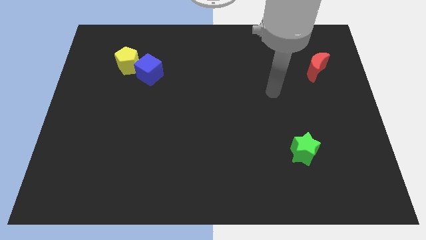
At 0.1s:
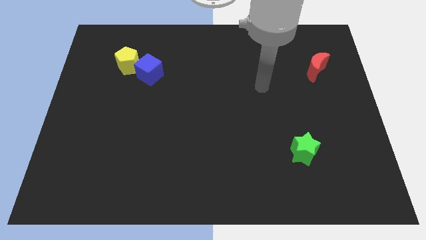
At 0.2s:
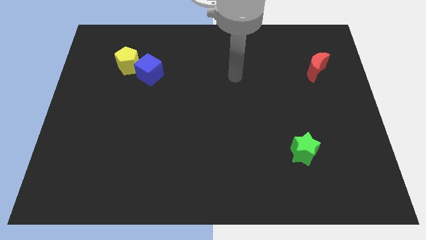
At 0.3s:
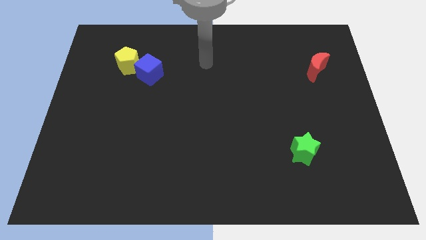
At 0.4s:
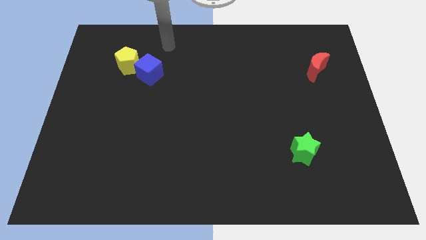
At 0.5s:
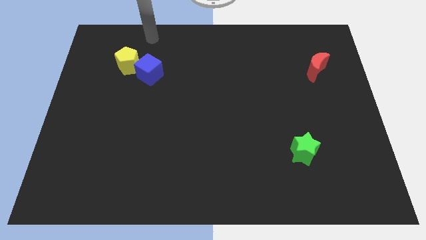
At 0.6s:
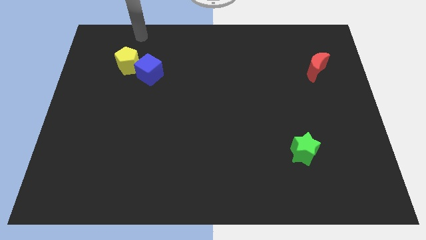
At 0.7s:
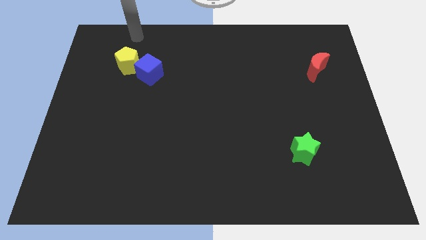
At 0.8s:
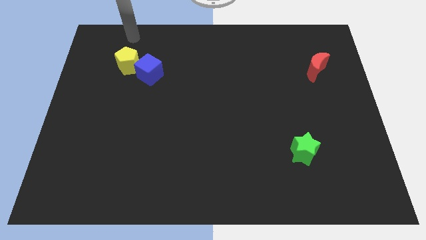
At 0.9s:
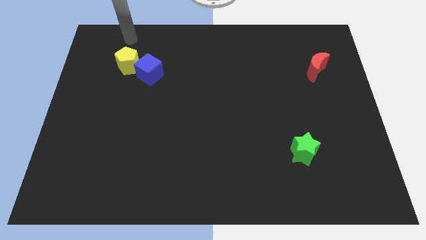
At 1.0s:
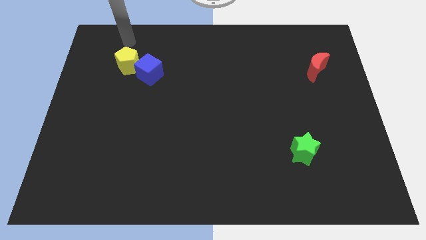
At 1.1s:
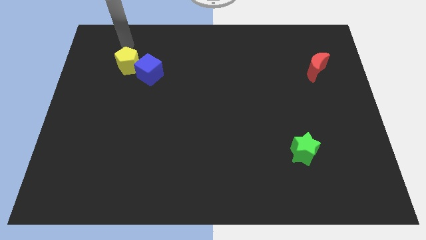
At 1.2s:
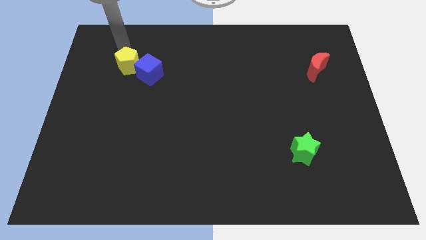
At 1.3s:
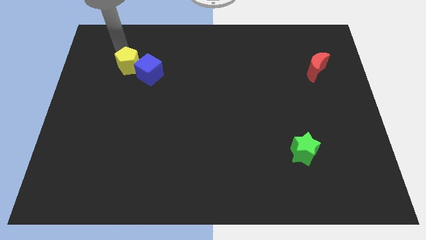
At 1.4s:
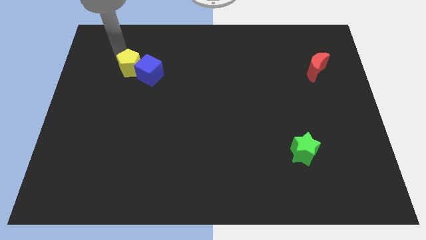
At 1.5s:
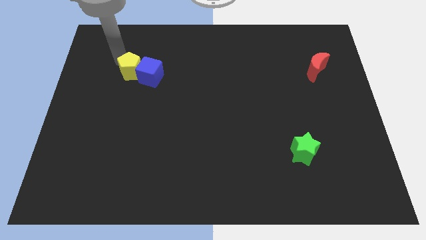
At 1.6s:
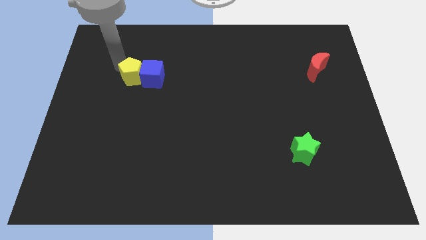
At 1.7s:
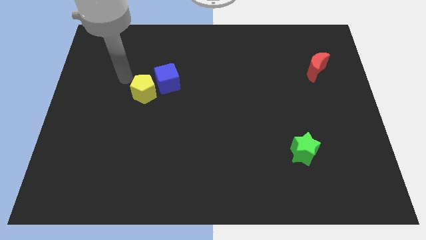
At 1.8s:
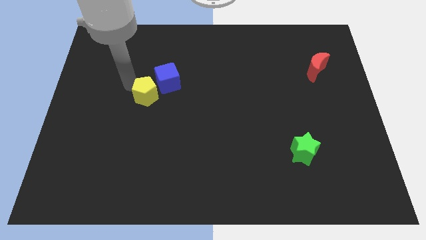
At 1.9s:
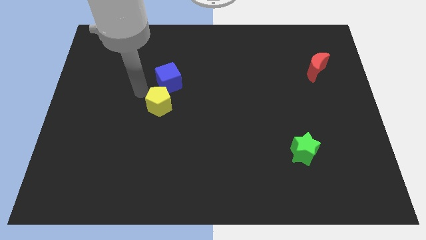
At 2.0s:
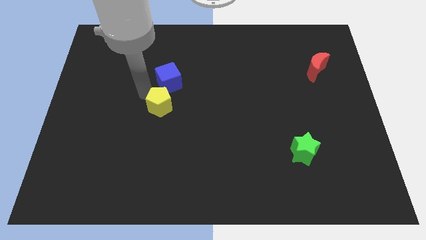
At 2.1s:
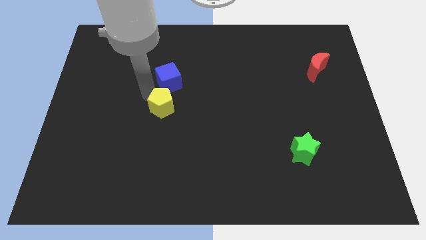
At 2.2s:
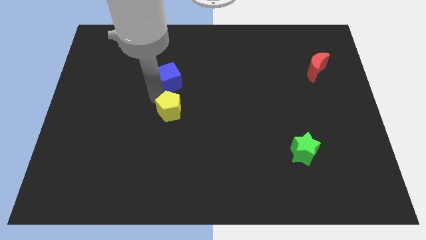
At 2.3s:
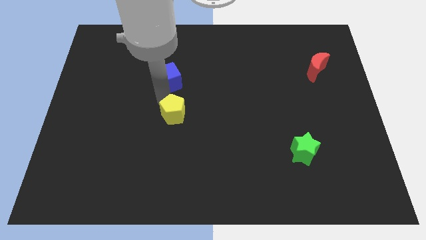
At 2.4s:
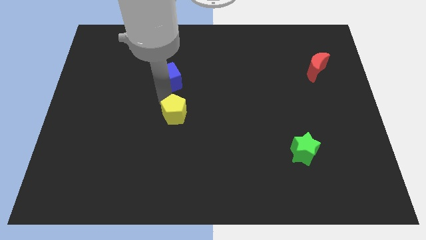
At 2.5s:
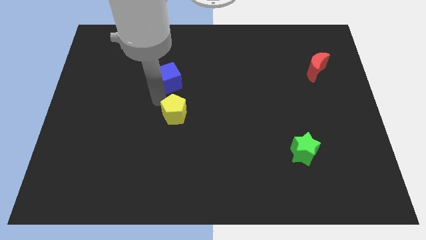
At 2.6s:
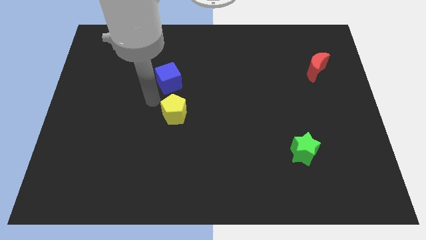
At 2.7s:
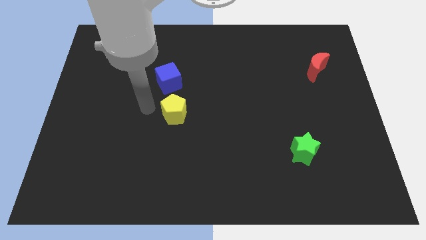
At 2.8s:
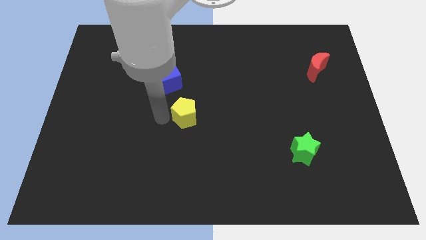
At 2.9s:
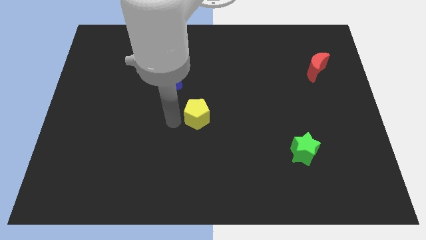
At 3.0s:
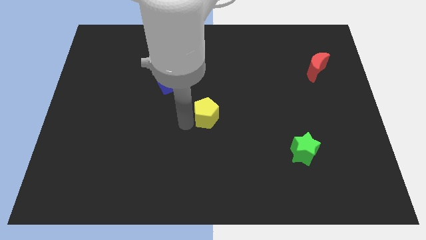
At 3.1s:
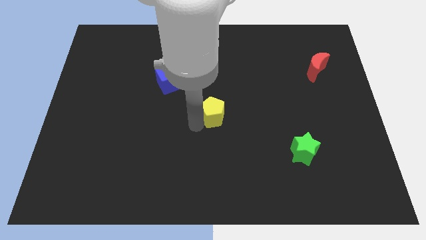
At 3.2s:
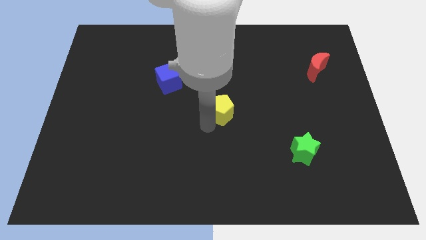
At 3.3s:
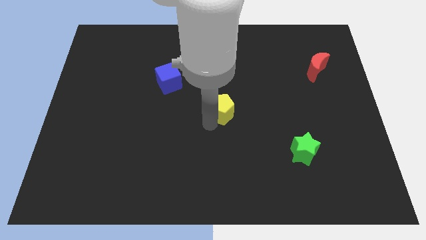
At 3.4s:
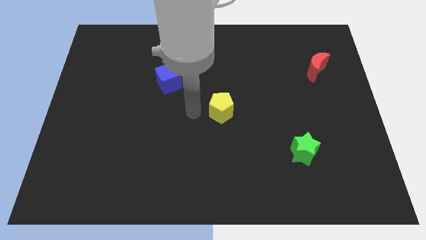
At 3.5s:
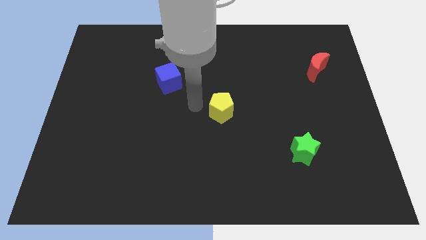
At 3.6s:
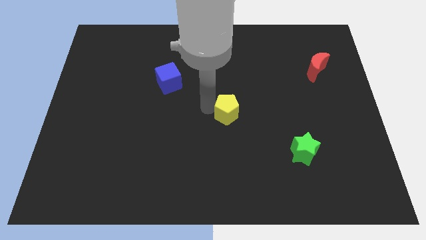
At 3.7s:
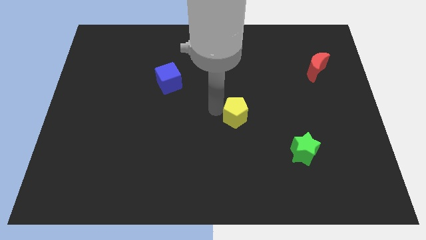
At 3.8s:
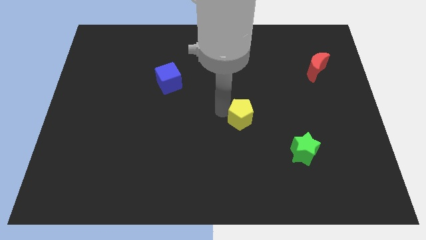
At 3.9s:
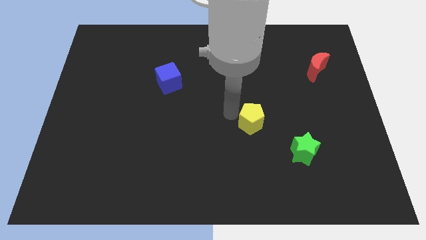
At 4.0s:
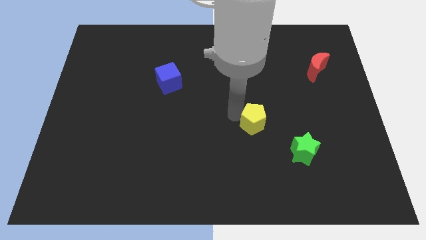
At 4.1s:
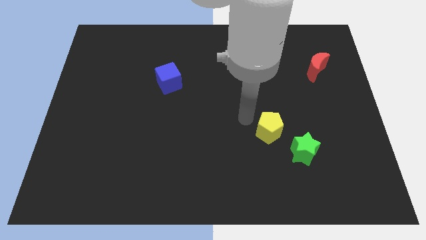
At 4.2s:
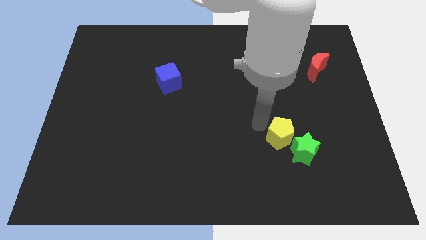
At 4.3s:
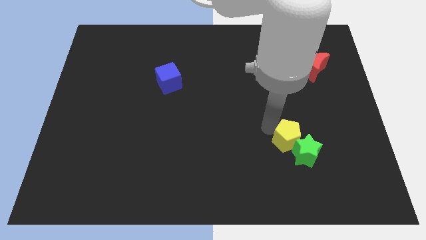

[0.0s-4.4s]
put the yellow block close to the green star

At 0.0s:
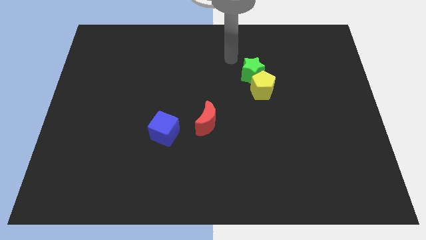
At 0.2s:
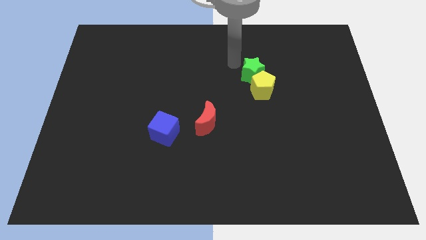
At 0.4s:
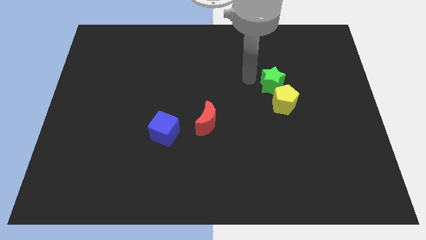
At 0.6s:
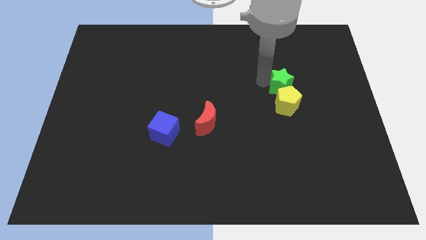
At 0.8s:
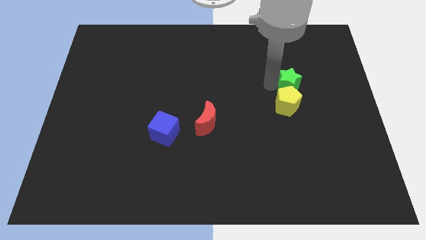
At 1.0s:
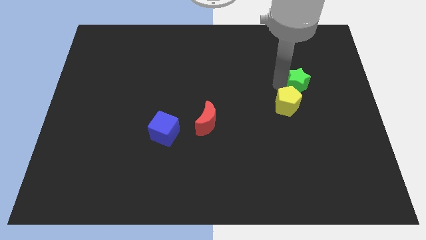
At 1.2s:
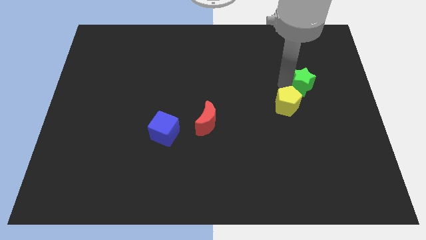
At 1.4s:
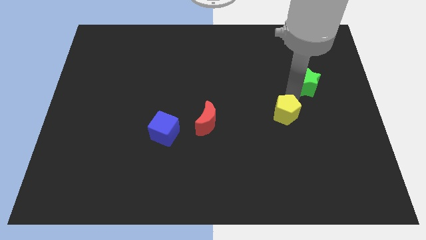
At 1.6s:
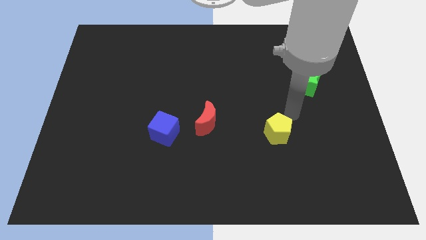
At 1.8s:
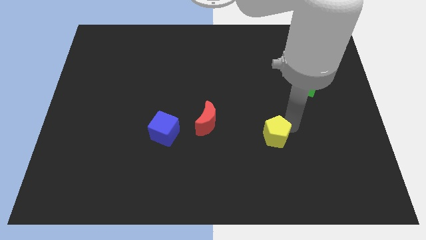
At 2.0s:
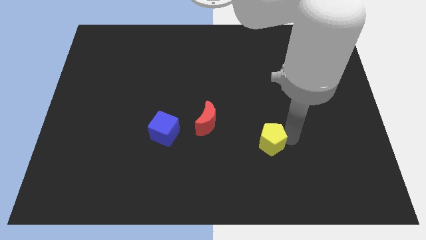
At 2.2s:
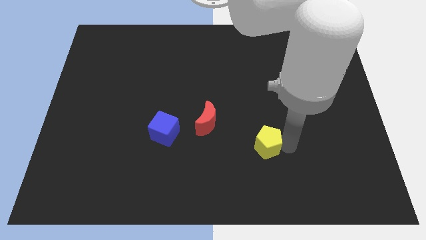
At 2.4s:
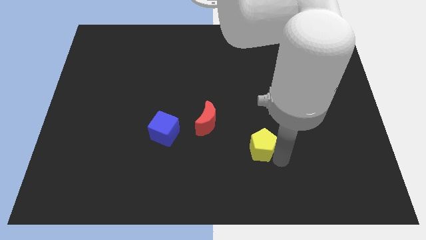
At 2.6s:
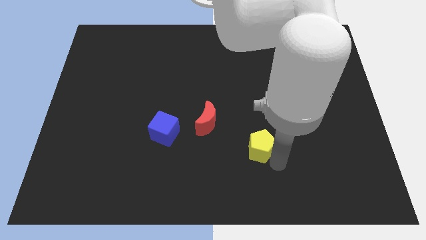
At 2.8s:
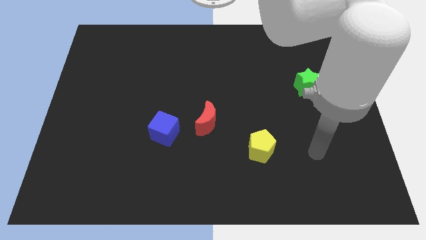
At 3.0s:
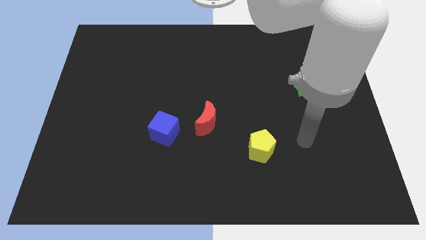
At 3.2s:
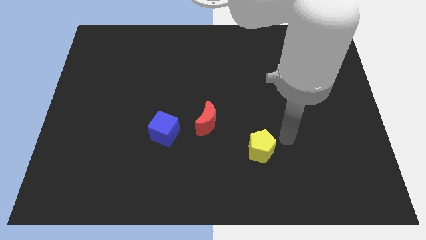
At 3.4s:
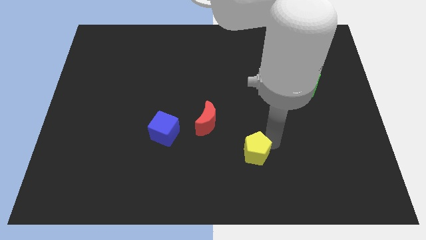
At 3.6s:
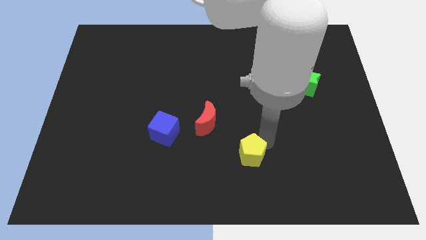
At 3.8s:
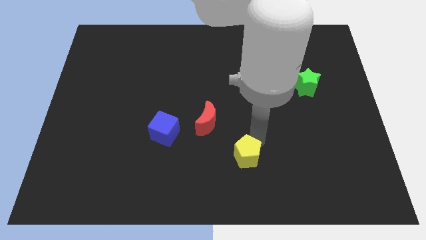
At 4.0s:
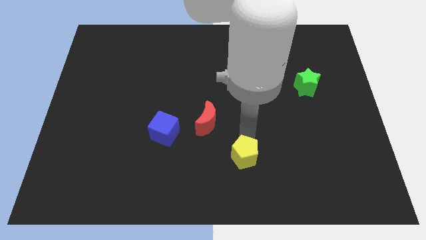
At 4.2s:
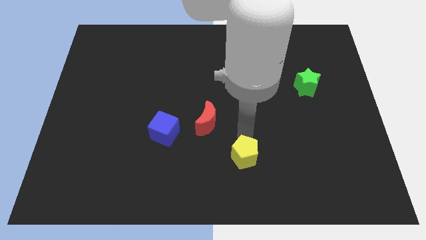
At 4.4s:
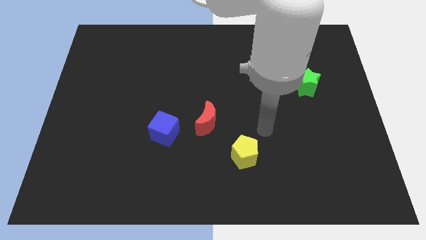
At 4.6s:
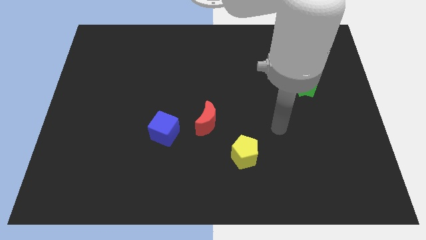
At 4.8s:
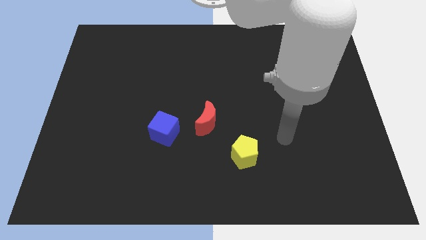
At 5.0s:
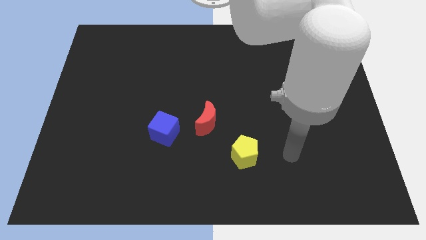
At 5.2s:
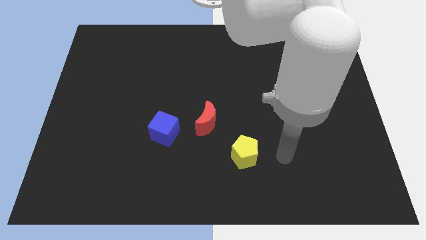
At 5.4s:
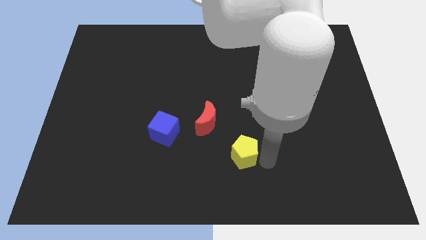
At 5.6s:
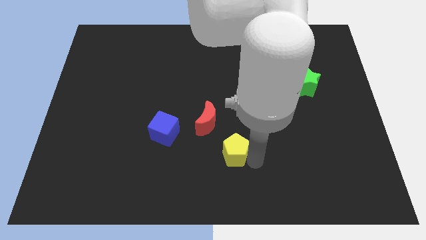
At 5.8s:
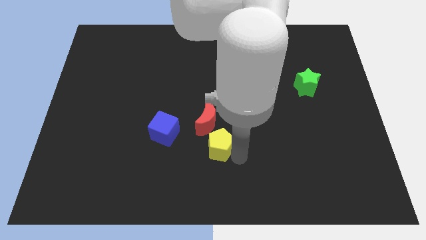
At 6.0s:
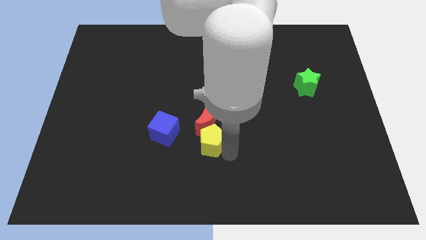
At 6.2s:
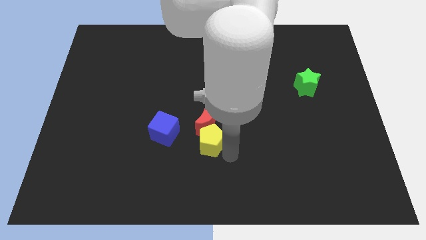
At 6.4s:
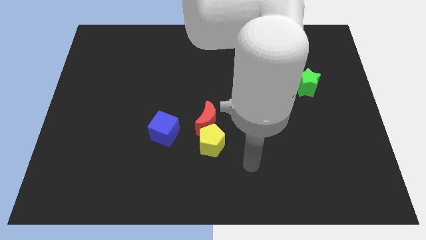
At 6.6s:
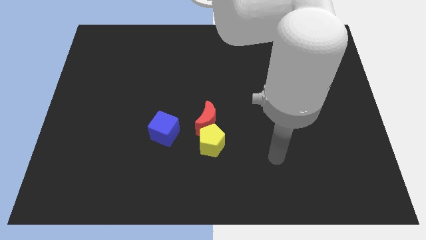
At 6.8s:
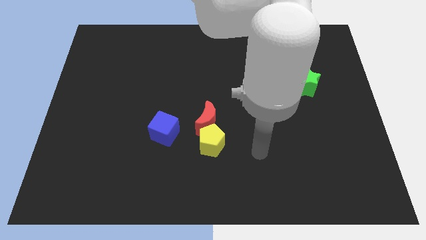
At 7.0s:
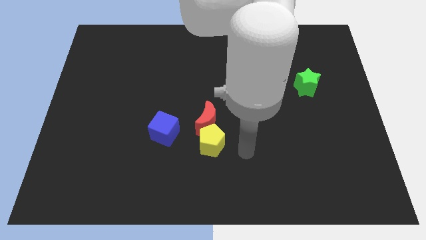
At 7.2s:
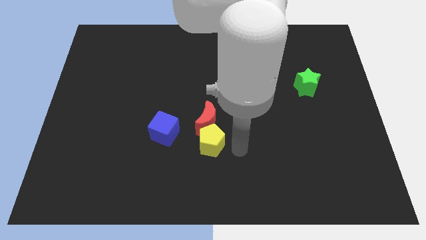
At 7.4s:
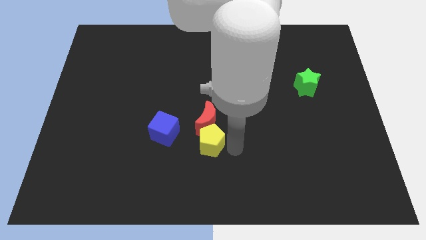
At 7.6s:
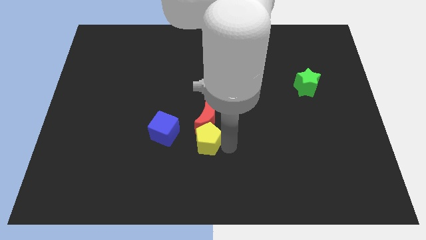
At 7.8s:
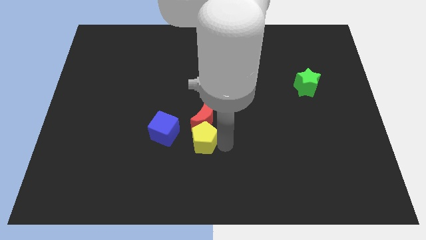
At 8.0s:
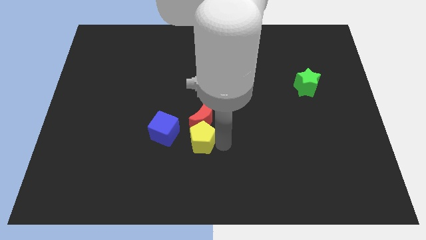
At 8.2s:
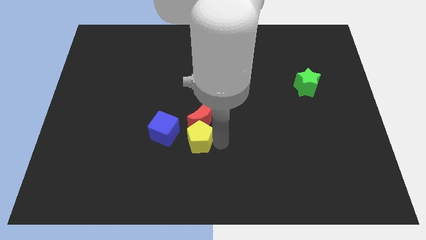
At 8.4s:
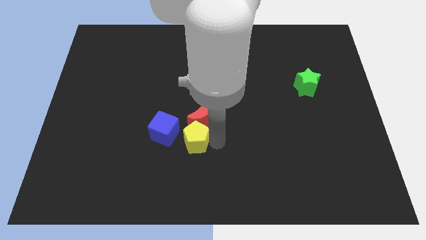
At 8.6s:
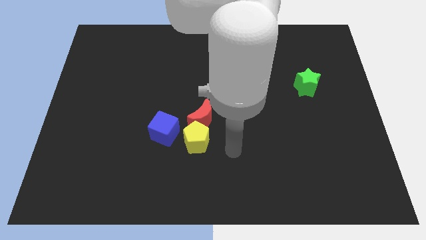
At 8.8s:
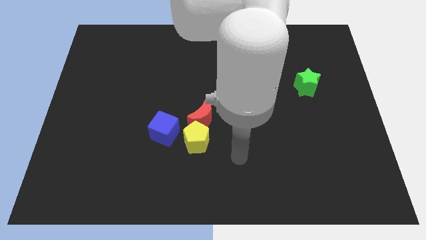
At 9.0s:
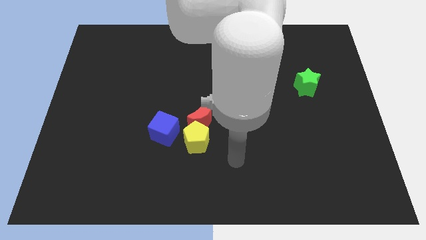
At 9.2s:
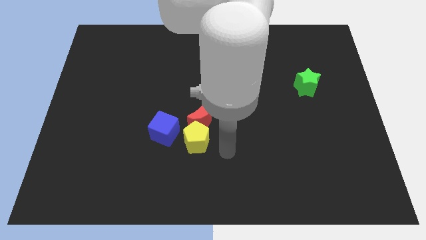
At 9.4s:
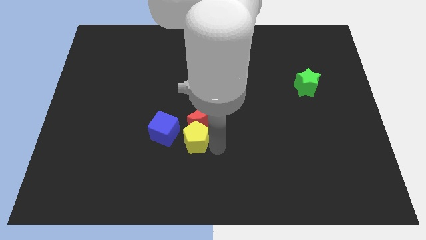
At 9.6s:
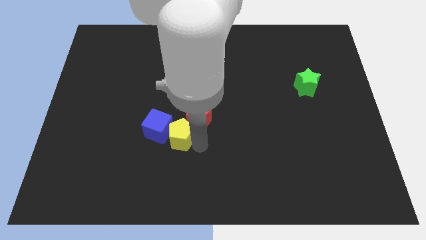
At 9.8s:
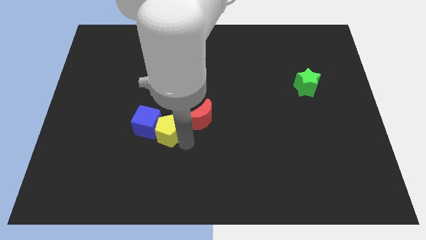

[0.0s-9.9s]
slide the yellow block close to the blue block
